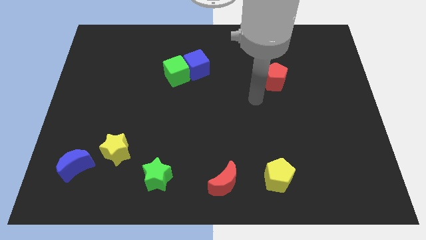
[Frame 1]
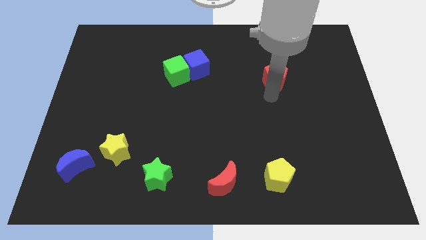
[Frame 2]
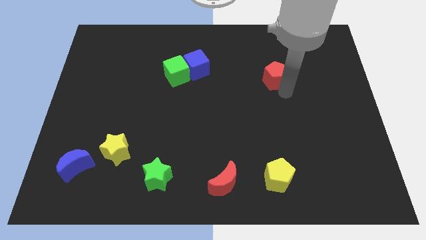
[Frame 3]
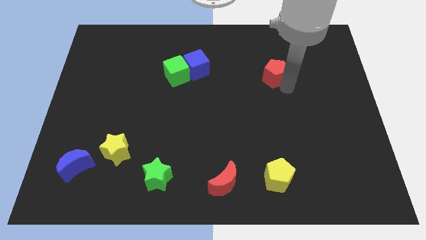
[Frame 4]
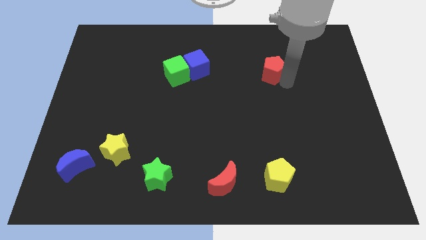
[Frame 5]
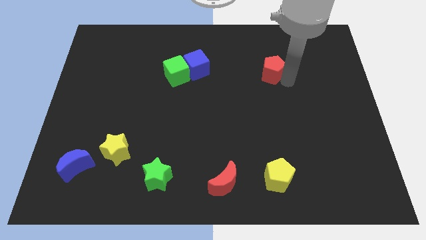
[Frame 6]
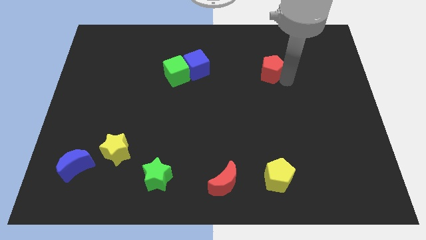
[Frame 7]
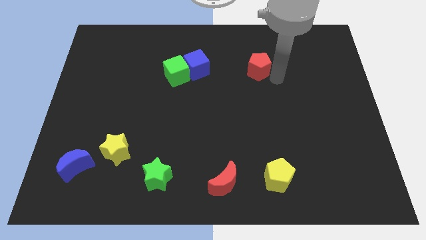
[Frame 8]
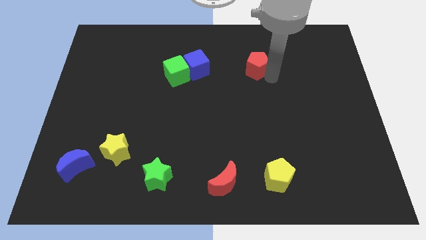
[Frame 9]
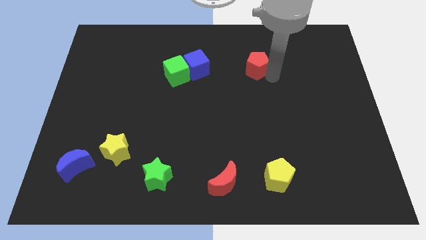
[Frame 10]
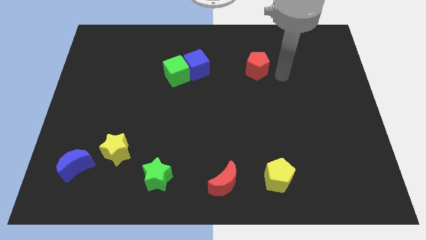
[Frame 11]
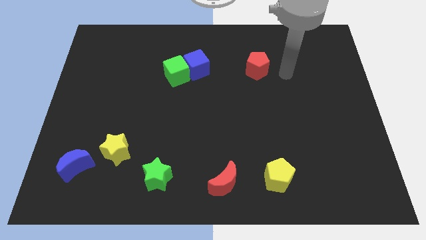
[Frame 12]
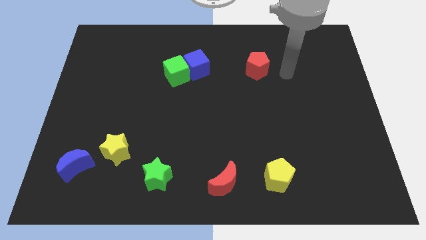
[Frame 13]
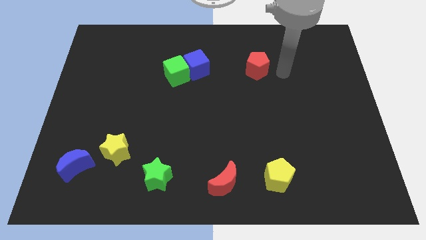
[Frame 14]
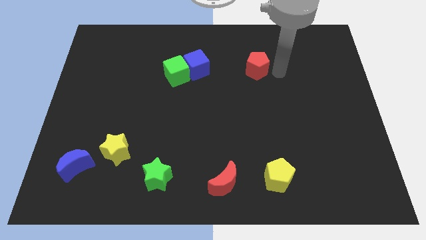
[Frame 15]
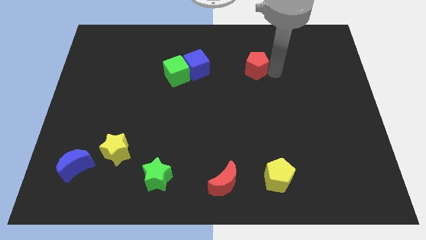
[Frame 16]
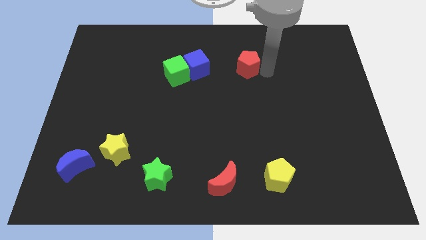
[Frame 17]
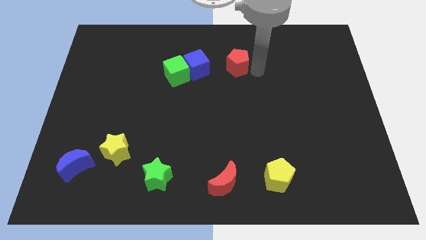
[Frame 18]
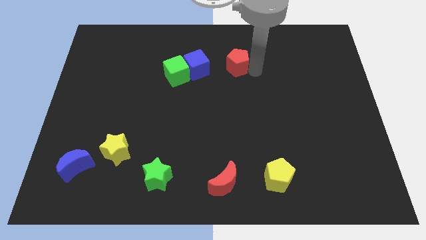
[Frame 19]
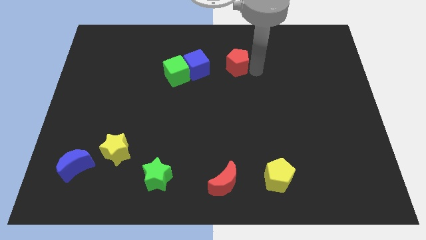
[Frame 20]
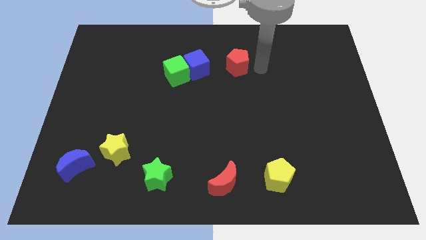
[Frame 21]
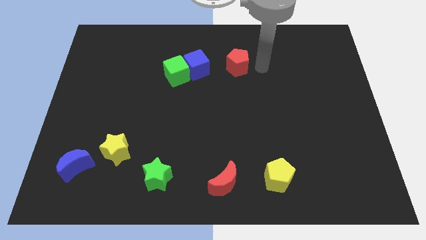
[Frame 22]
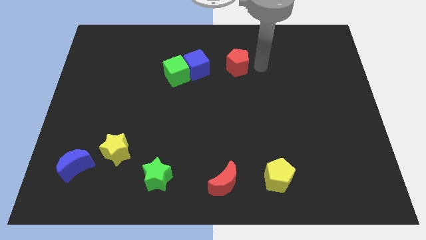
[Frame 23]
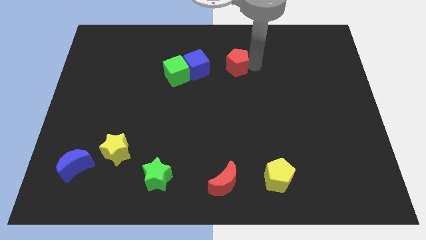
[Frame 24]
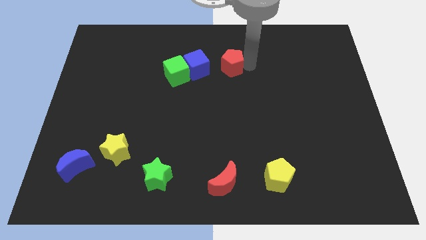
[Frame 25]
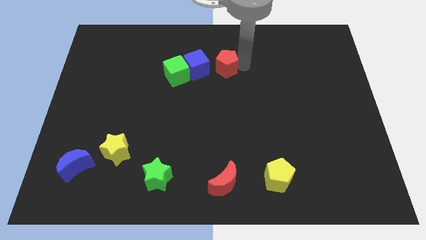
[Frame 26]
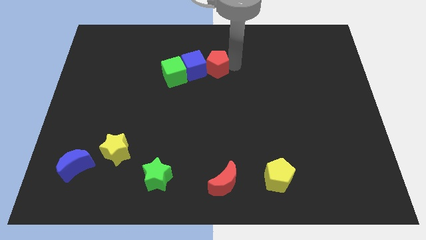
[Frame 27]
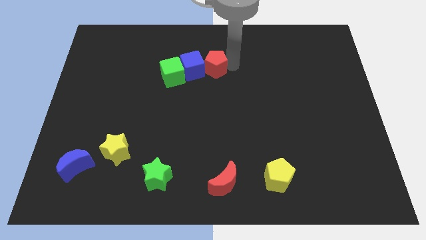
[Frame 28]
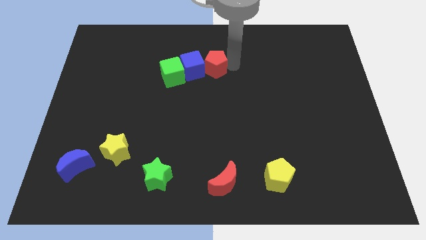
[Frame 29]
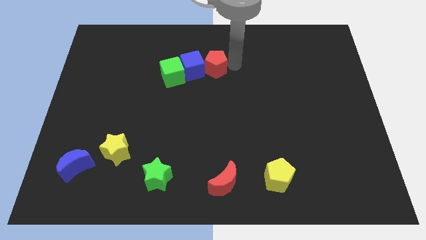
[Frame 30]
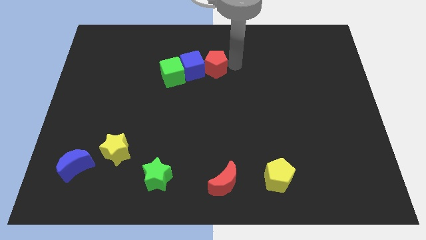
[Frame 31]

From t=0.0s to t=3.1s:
push the red pentagon into the blue cube

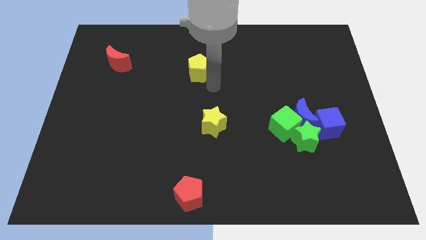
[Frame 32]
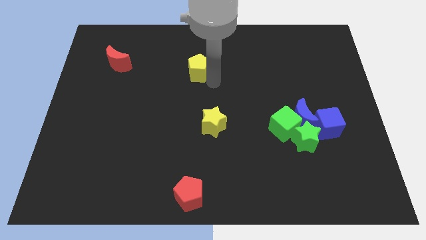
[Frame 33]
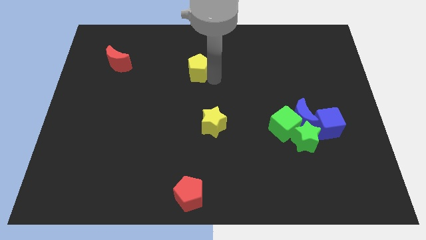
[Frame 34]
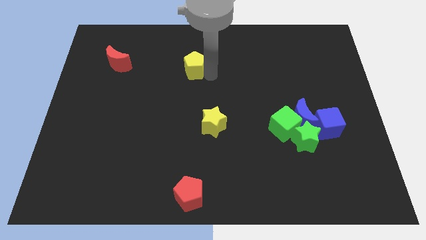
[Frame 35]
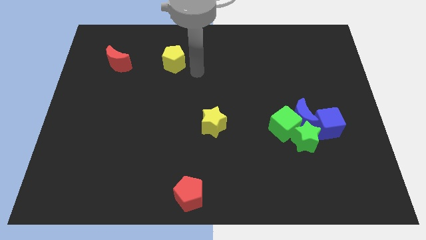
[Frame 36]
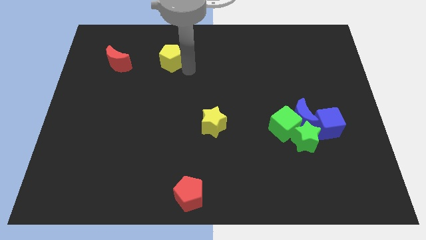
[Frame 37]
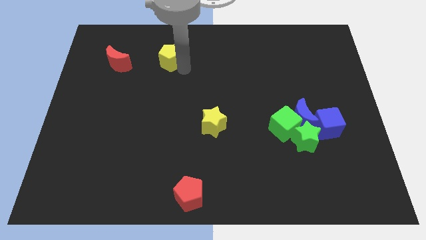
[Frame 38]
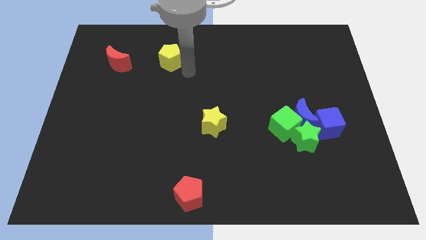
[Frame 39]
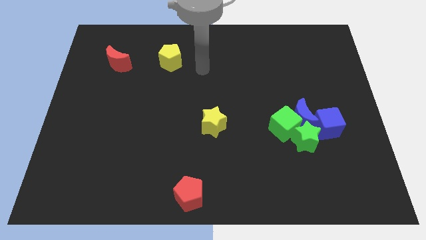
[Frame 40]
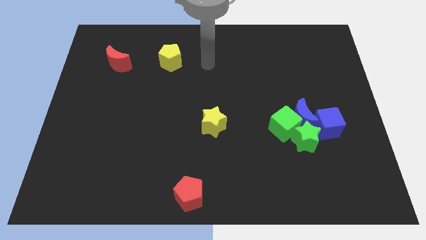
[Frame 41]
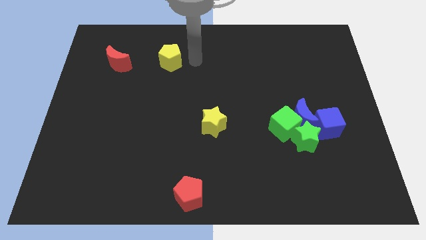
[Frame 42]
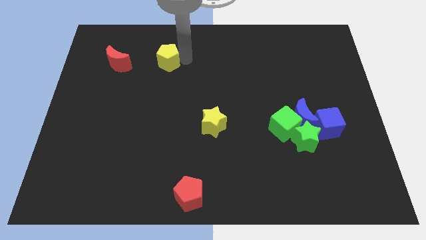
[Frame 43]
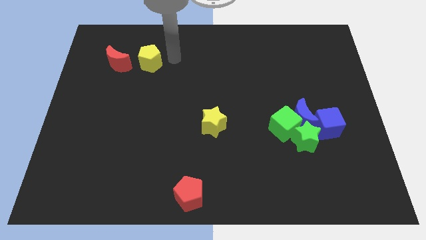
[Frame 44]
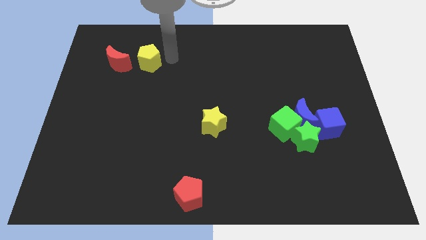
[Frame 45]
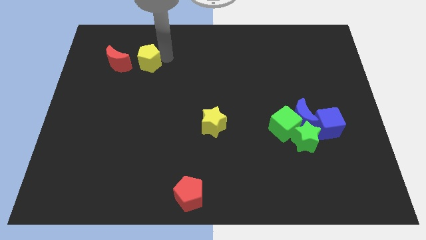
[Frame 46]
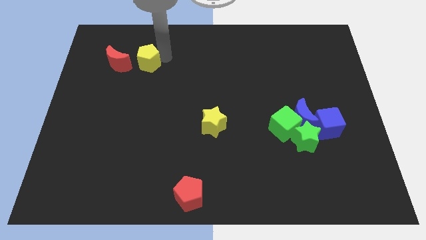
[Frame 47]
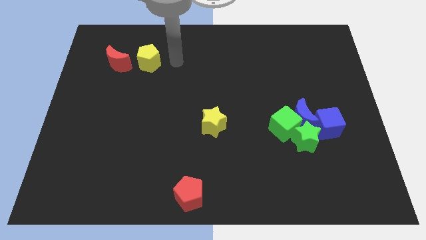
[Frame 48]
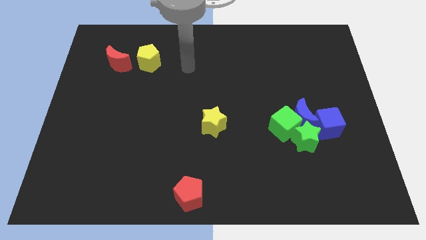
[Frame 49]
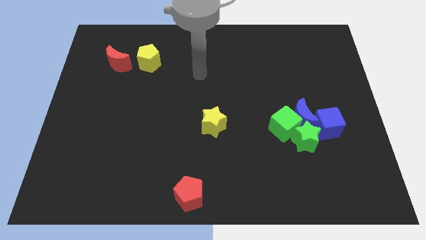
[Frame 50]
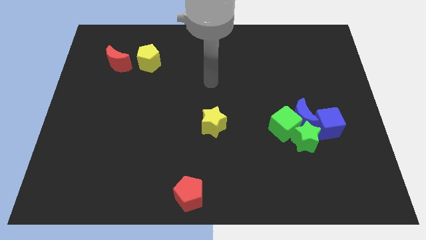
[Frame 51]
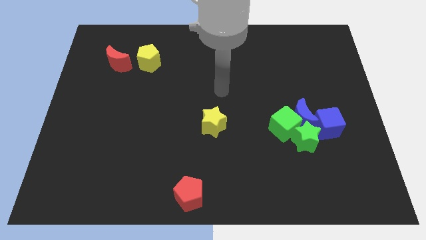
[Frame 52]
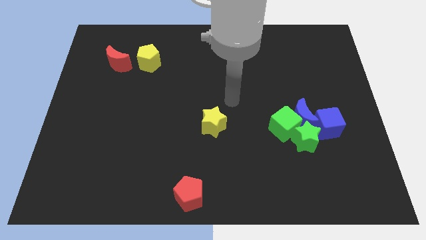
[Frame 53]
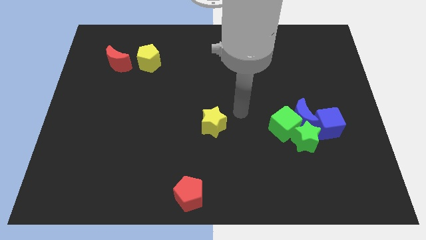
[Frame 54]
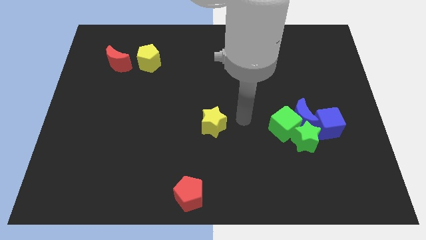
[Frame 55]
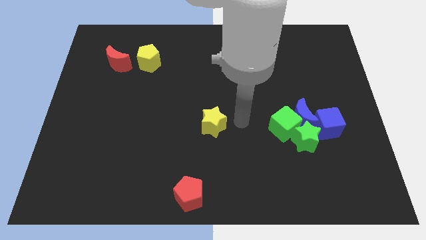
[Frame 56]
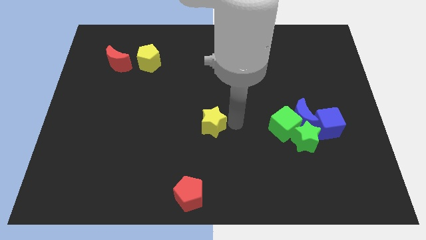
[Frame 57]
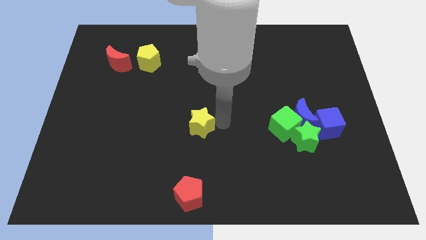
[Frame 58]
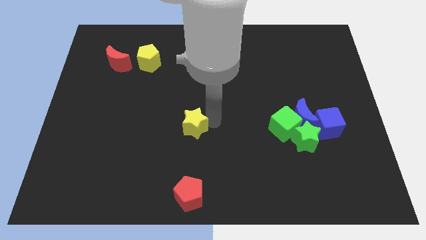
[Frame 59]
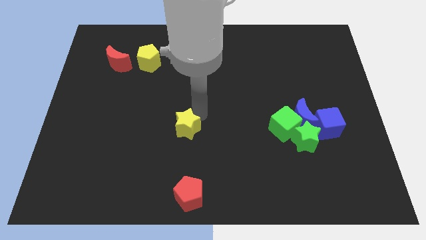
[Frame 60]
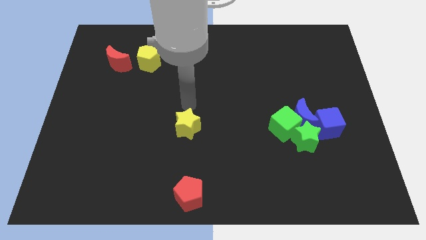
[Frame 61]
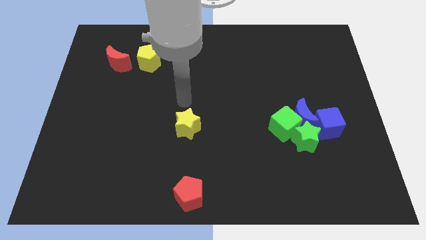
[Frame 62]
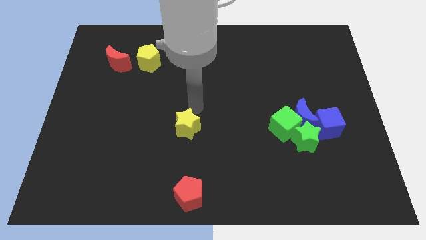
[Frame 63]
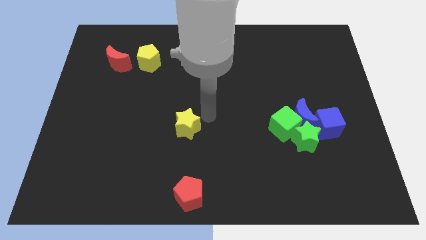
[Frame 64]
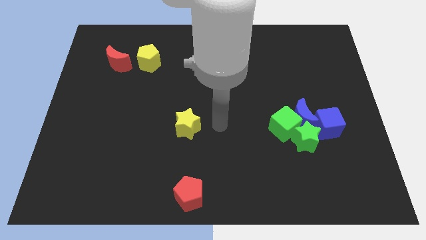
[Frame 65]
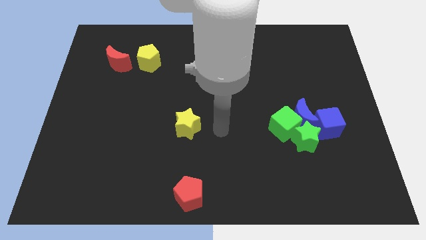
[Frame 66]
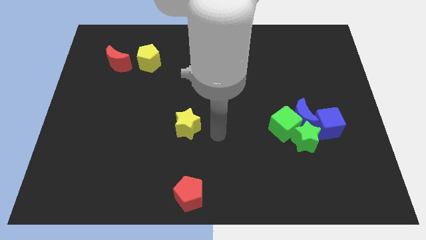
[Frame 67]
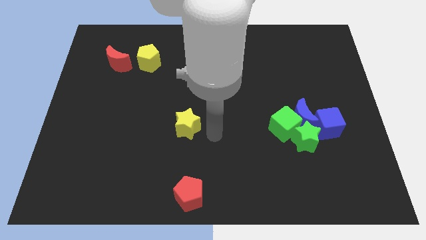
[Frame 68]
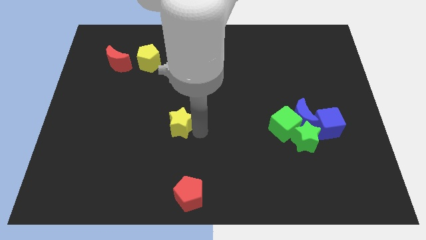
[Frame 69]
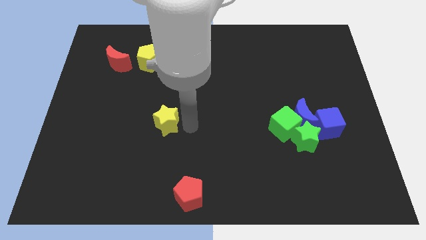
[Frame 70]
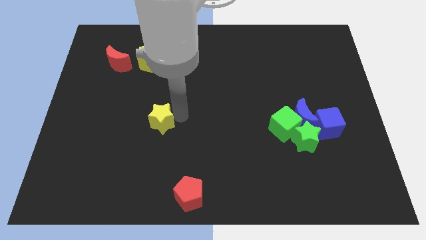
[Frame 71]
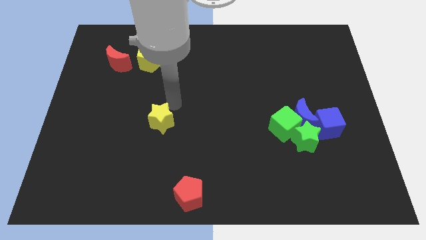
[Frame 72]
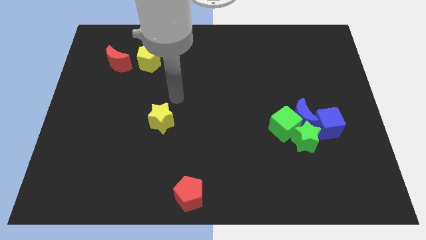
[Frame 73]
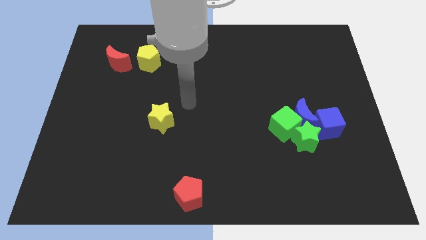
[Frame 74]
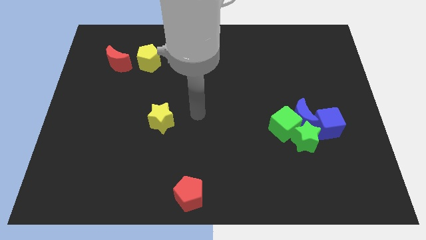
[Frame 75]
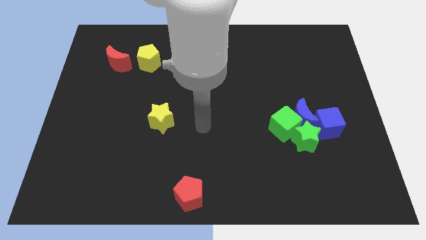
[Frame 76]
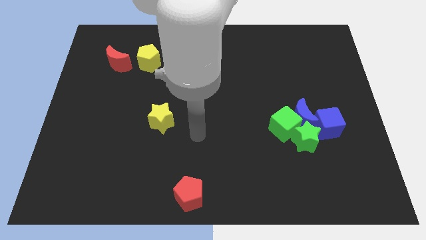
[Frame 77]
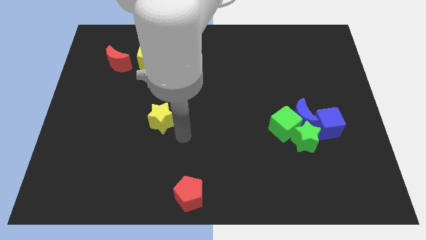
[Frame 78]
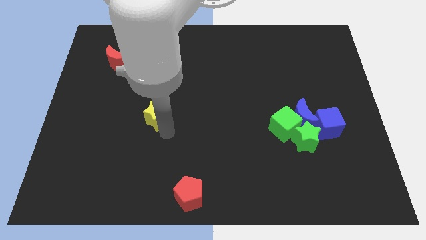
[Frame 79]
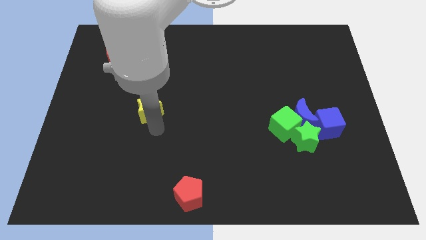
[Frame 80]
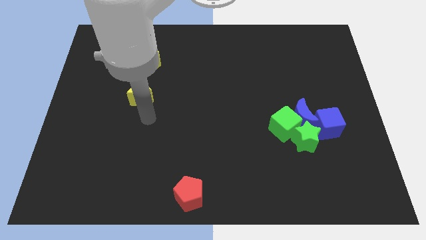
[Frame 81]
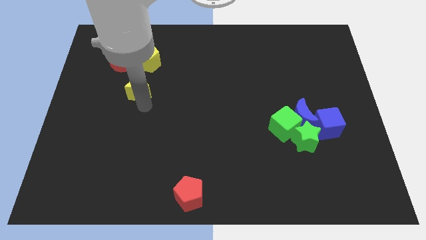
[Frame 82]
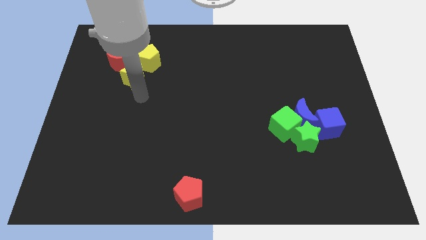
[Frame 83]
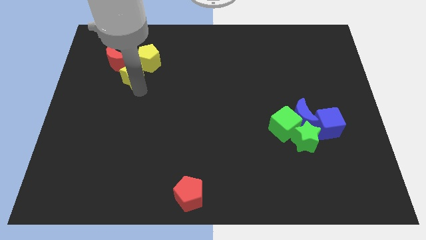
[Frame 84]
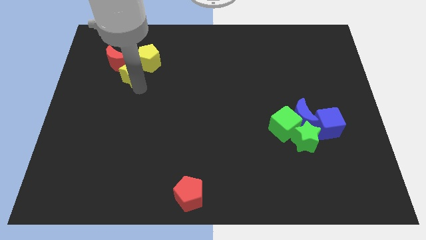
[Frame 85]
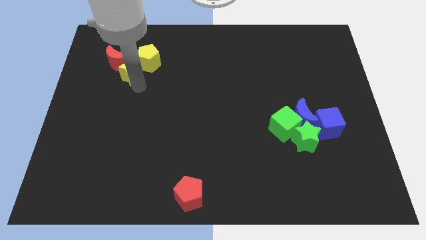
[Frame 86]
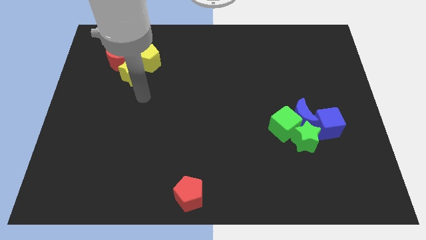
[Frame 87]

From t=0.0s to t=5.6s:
group up the yellow blocks with the red crescent at the top left of the table

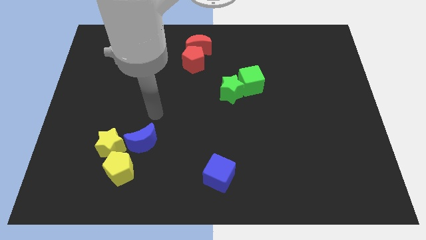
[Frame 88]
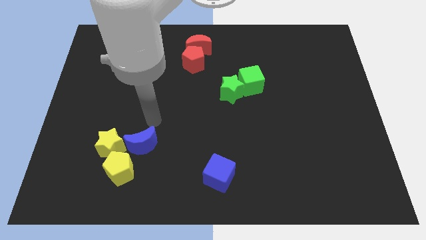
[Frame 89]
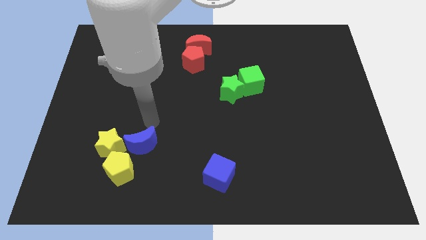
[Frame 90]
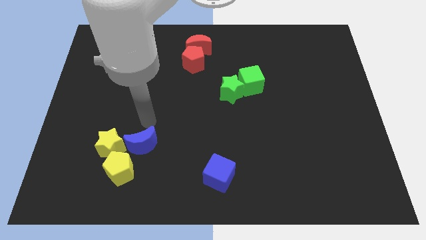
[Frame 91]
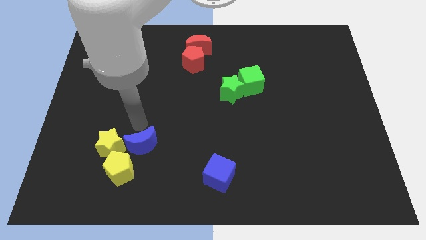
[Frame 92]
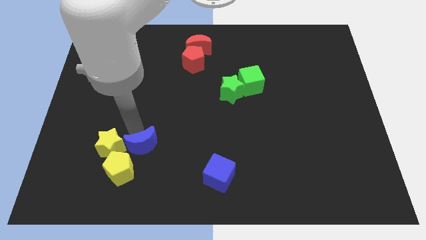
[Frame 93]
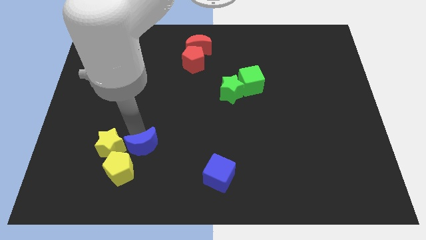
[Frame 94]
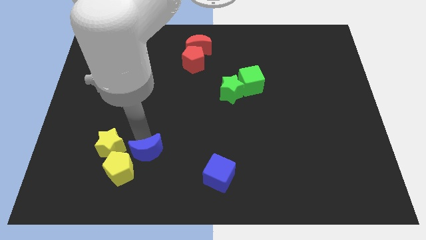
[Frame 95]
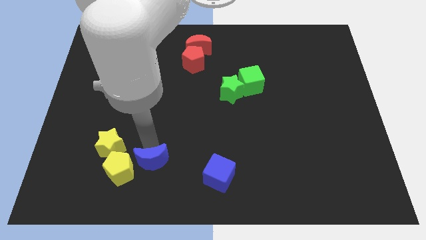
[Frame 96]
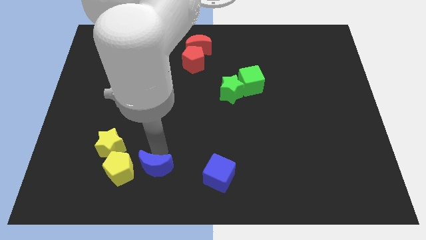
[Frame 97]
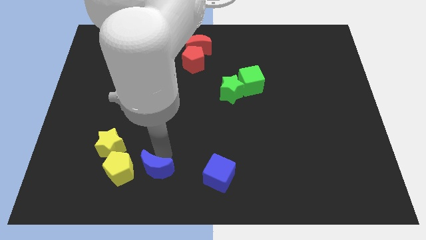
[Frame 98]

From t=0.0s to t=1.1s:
place the blue moon on the right side of the yellow pentagon
